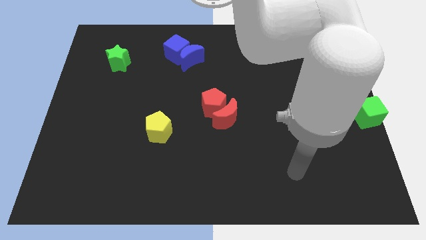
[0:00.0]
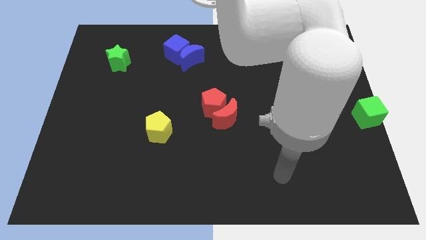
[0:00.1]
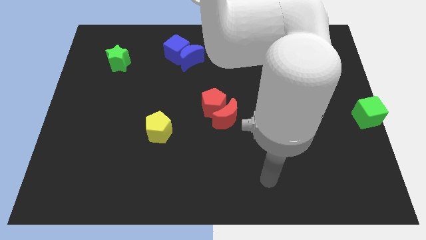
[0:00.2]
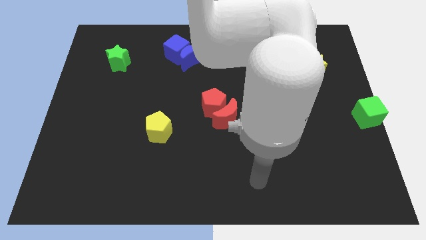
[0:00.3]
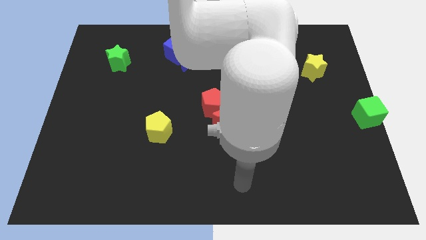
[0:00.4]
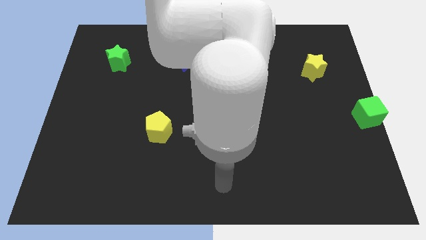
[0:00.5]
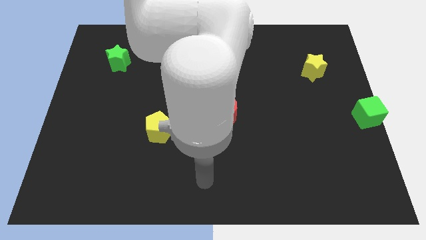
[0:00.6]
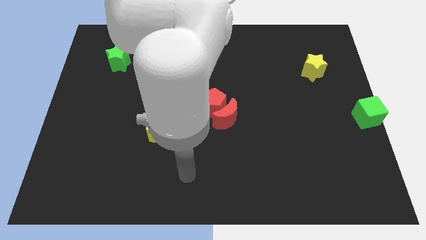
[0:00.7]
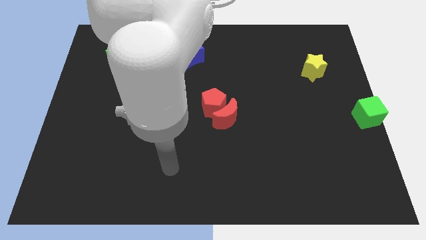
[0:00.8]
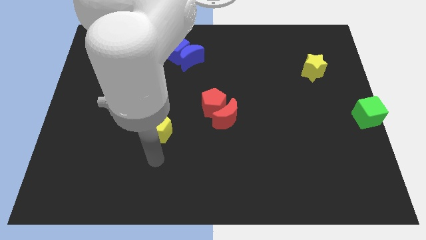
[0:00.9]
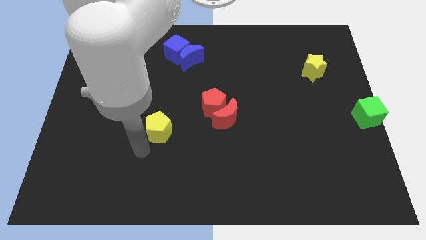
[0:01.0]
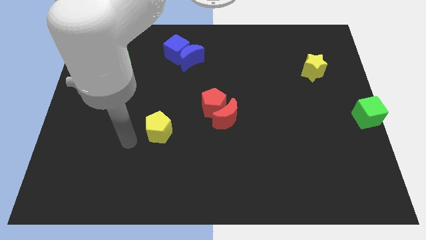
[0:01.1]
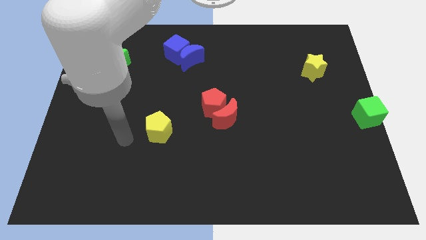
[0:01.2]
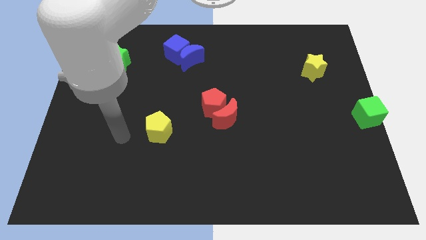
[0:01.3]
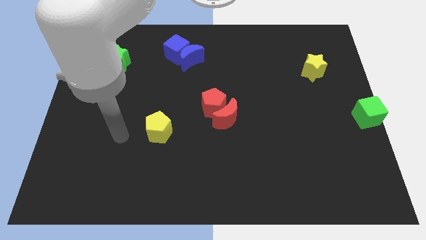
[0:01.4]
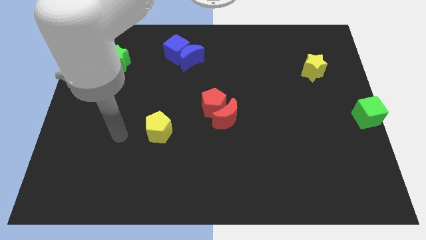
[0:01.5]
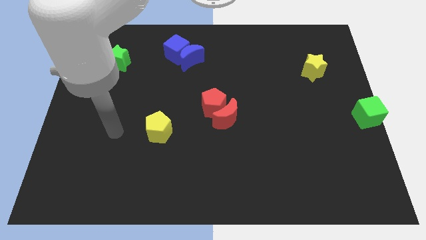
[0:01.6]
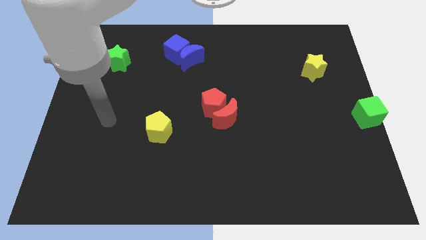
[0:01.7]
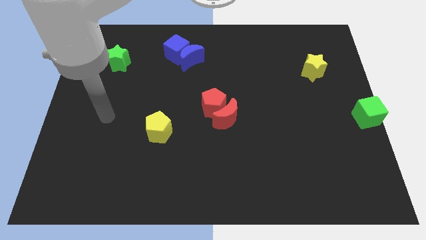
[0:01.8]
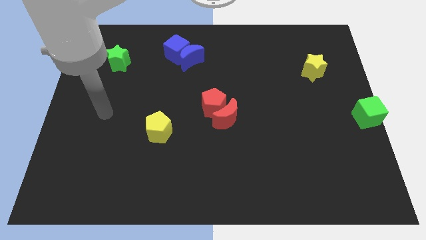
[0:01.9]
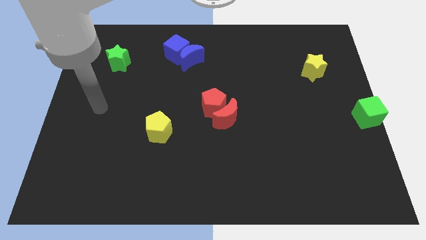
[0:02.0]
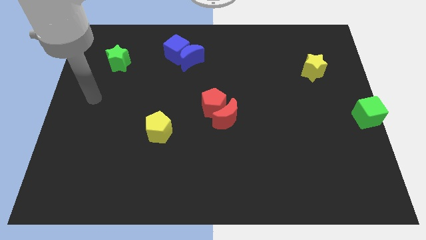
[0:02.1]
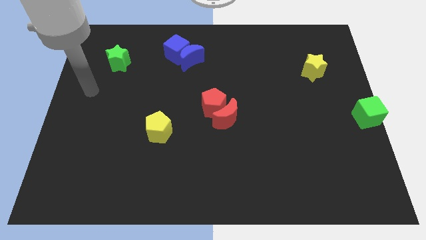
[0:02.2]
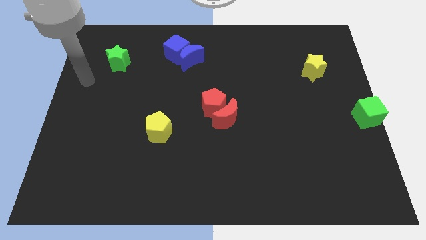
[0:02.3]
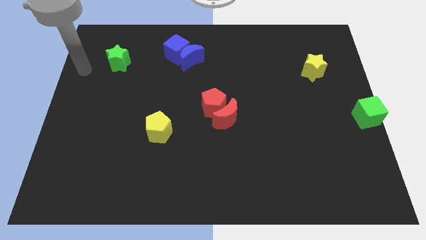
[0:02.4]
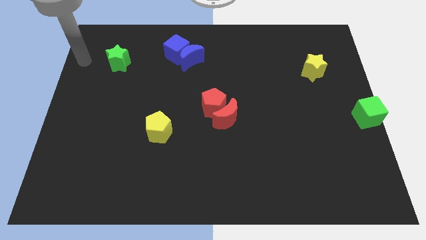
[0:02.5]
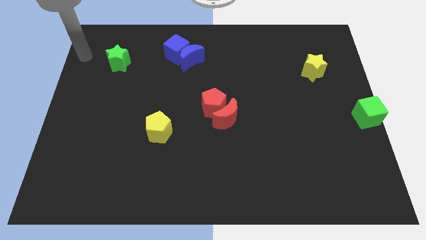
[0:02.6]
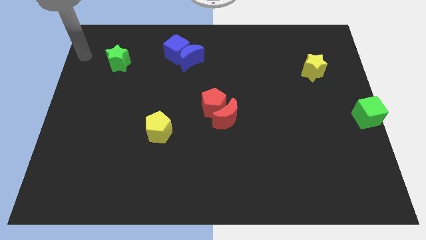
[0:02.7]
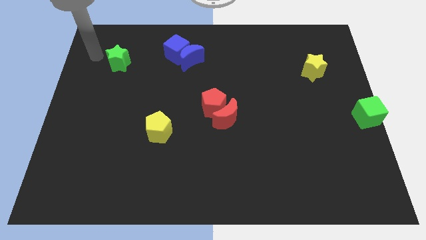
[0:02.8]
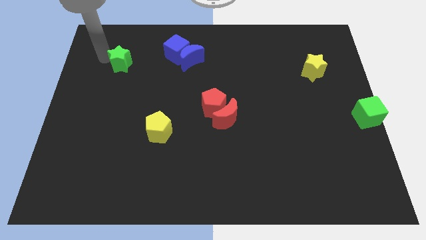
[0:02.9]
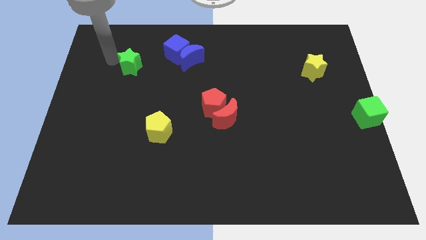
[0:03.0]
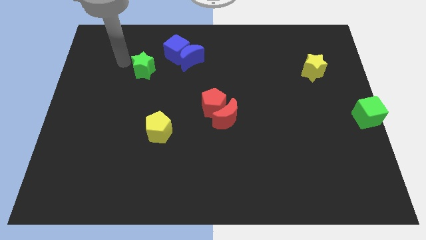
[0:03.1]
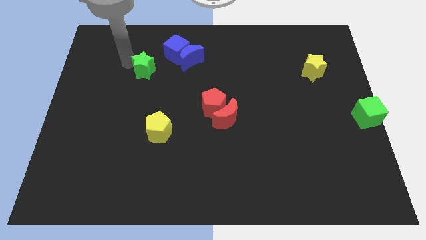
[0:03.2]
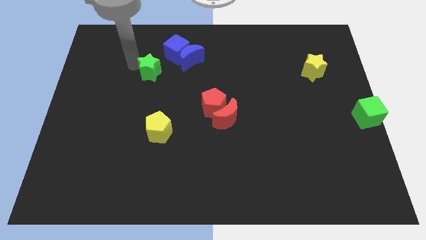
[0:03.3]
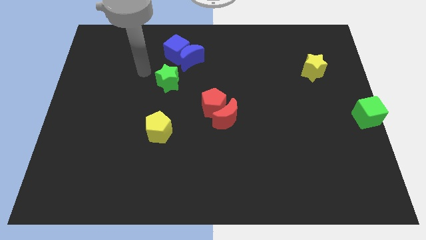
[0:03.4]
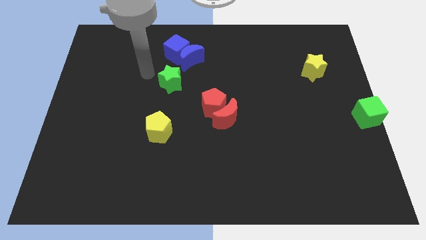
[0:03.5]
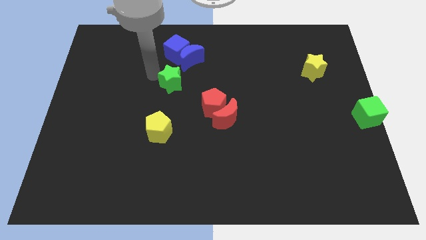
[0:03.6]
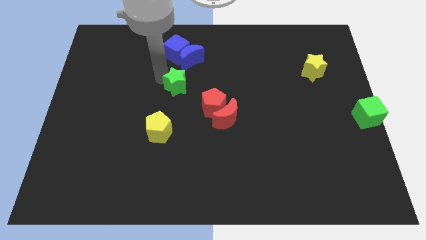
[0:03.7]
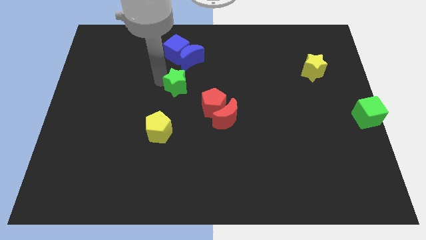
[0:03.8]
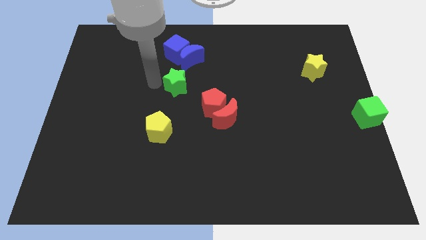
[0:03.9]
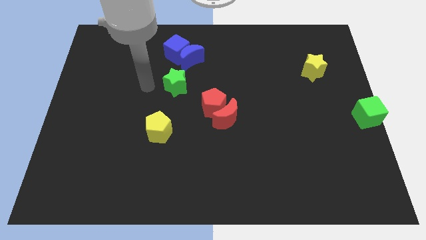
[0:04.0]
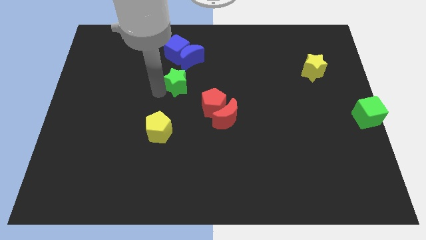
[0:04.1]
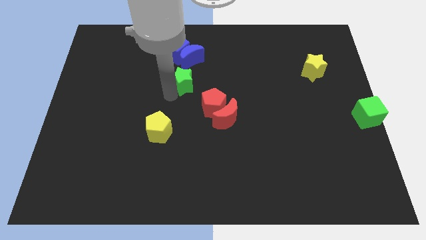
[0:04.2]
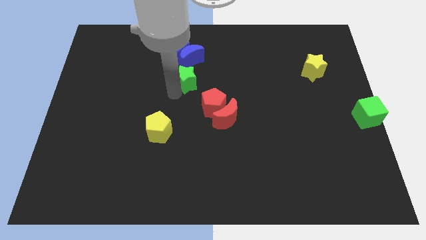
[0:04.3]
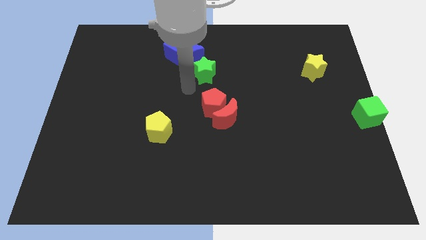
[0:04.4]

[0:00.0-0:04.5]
push the green star to the bottom right side of the blue crescent

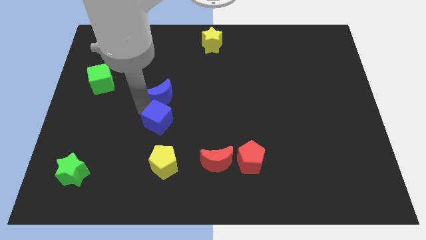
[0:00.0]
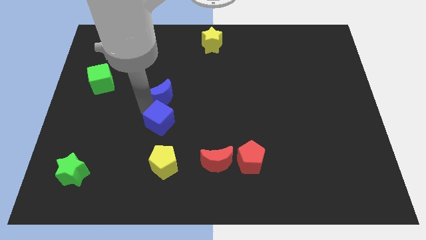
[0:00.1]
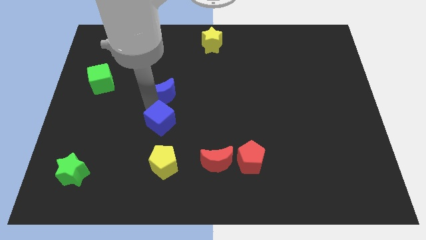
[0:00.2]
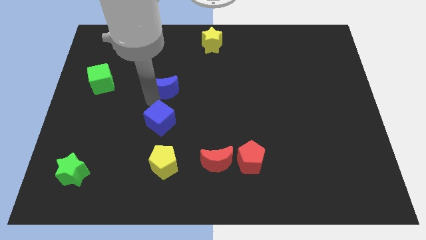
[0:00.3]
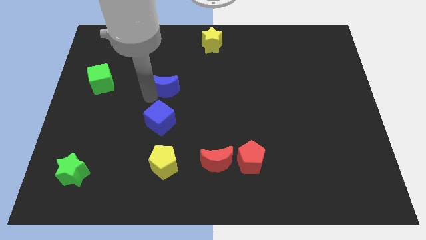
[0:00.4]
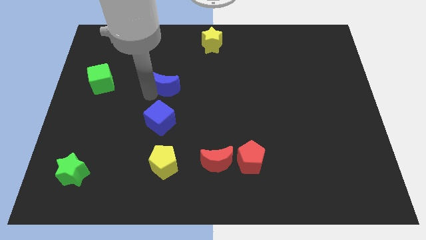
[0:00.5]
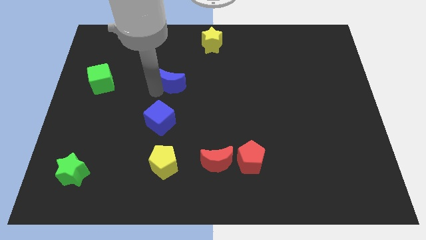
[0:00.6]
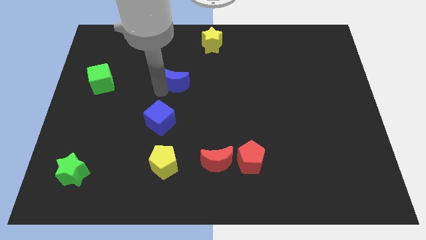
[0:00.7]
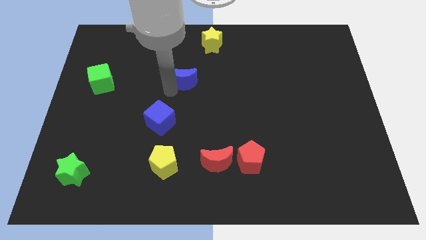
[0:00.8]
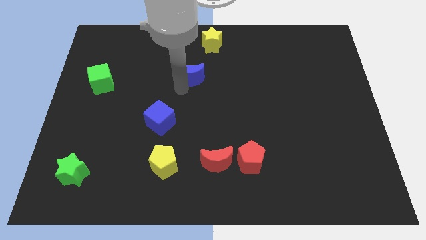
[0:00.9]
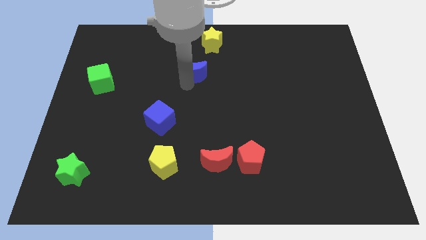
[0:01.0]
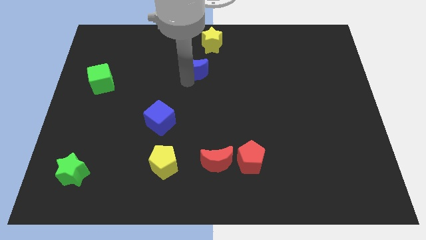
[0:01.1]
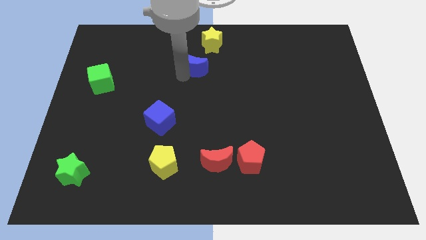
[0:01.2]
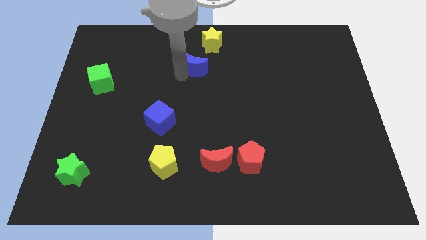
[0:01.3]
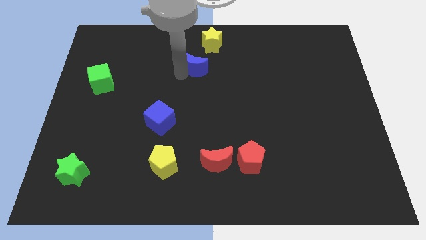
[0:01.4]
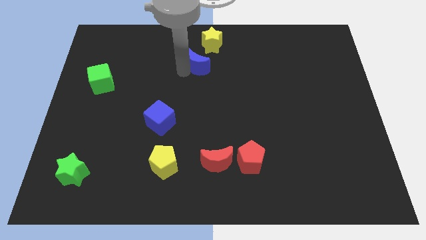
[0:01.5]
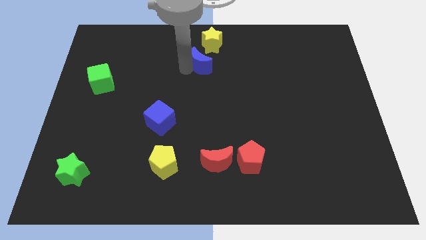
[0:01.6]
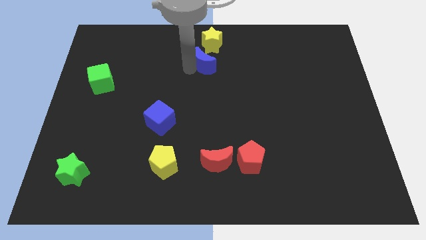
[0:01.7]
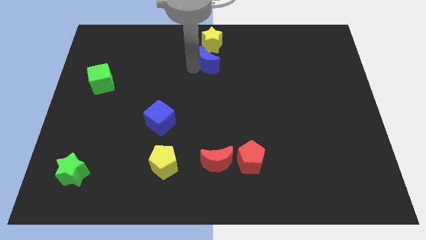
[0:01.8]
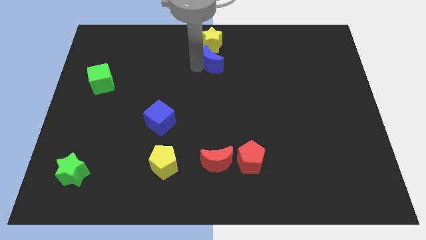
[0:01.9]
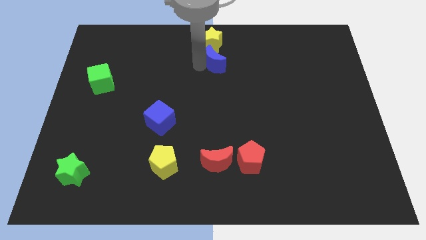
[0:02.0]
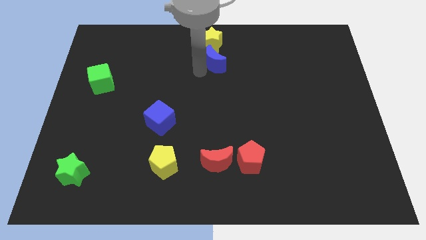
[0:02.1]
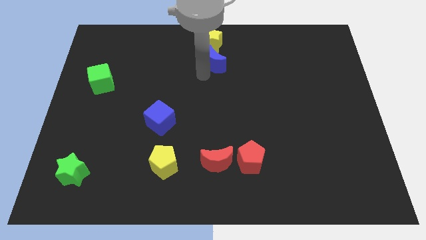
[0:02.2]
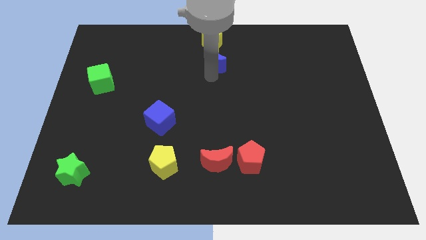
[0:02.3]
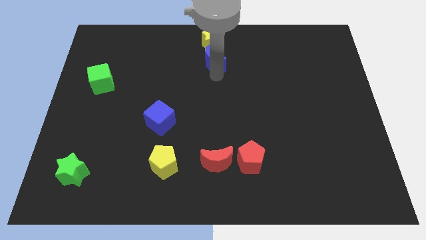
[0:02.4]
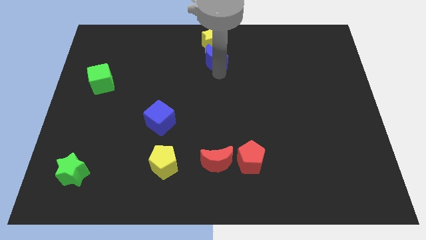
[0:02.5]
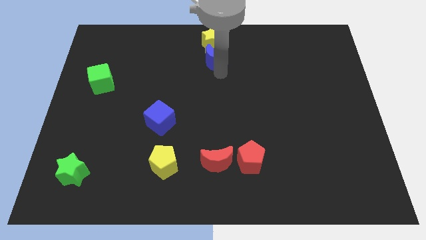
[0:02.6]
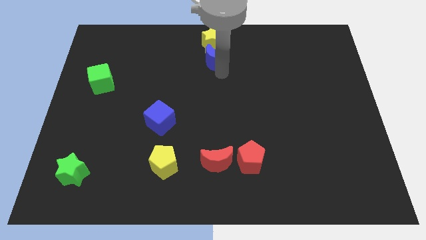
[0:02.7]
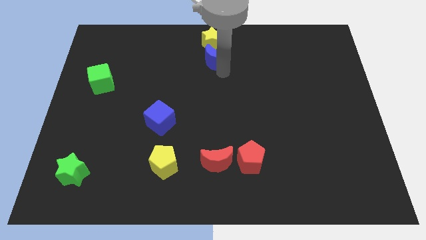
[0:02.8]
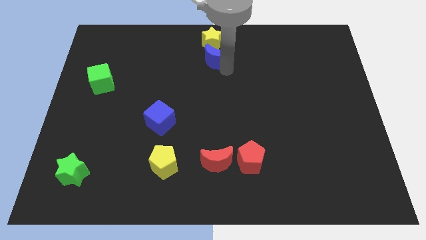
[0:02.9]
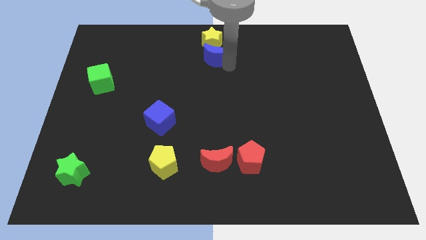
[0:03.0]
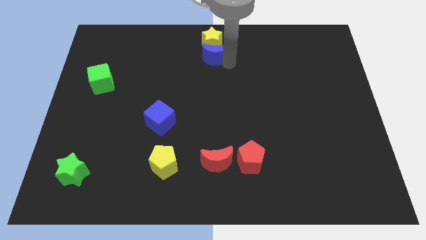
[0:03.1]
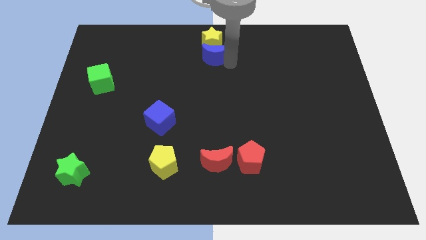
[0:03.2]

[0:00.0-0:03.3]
place the blue moon in between the yellow star and red moon

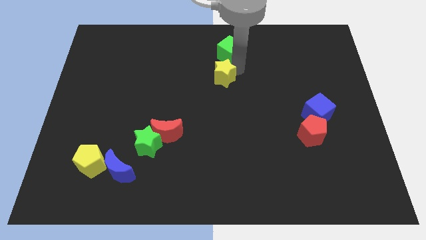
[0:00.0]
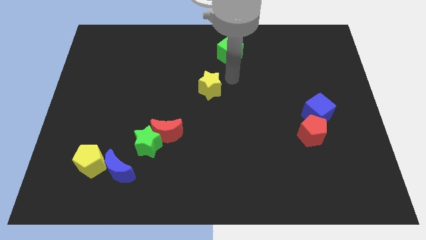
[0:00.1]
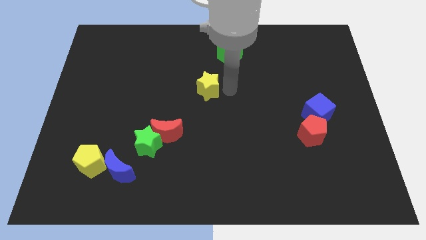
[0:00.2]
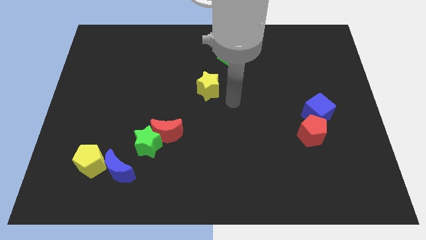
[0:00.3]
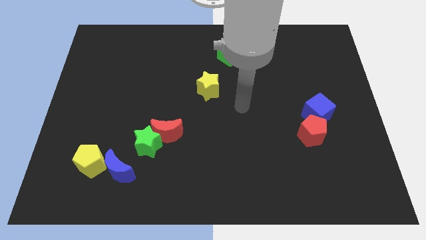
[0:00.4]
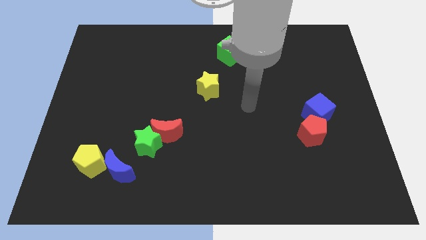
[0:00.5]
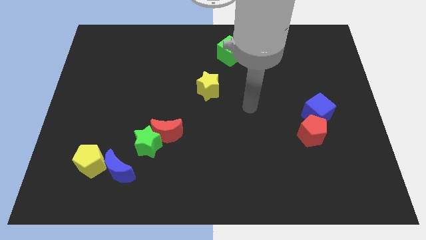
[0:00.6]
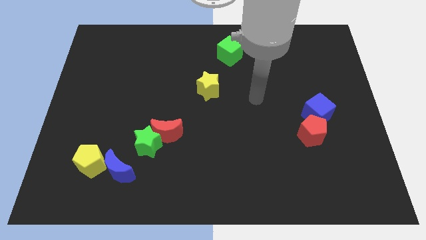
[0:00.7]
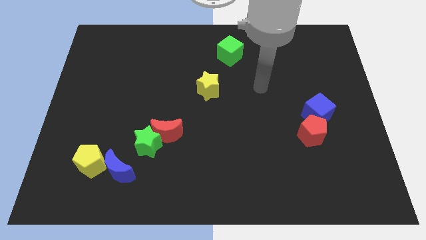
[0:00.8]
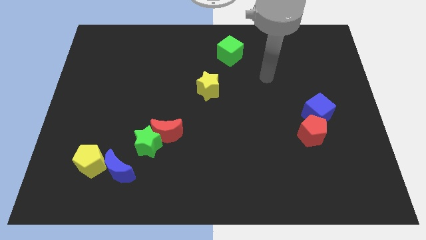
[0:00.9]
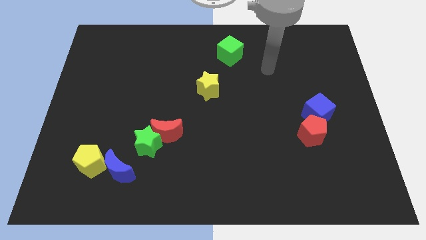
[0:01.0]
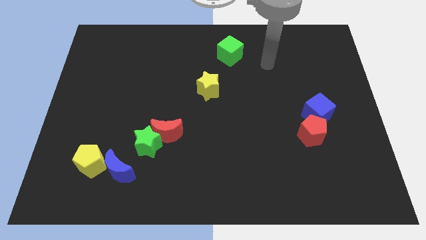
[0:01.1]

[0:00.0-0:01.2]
push the yellow star diagonally to the bottom left of the green cube
